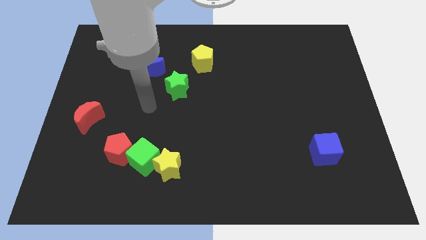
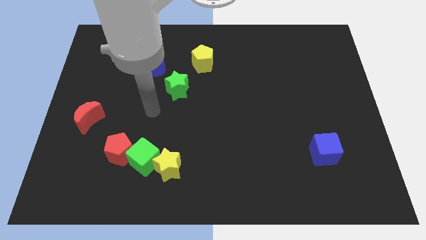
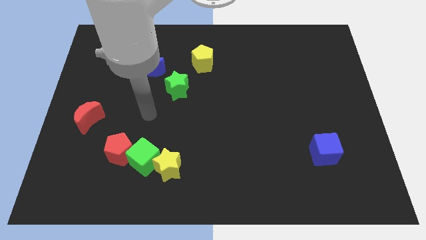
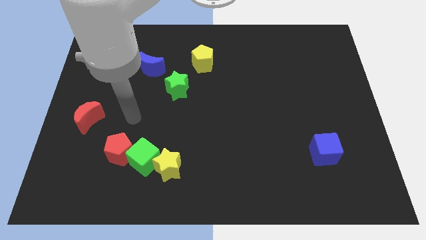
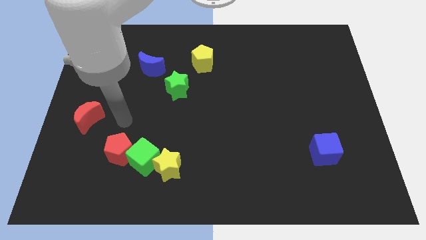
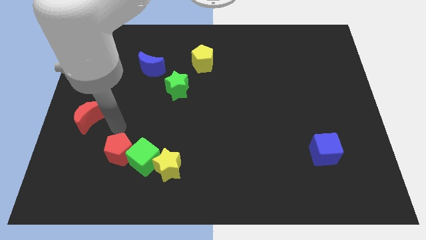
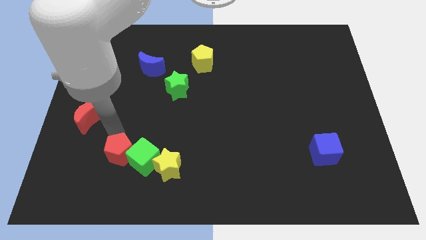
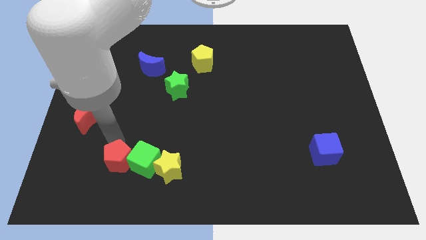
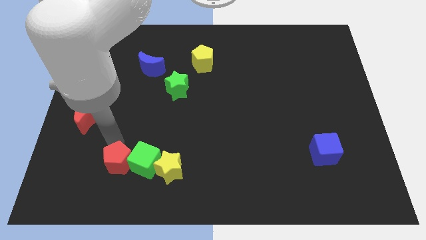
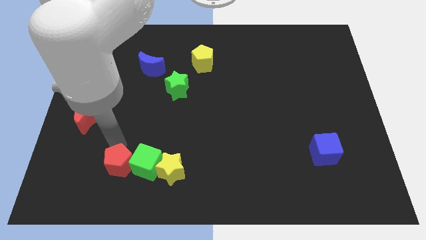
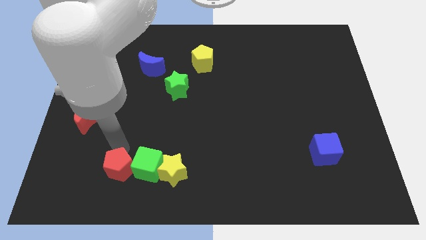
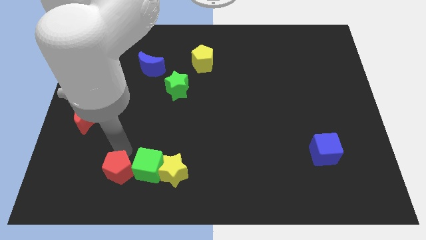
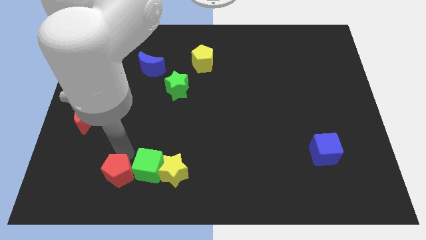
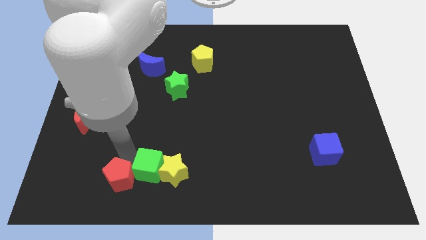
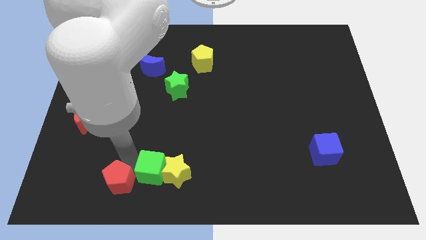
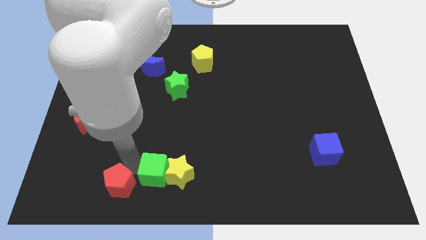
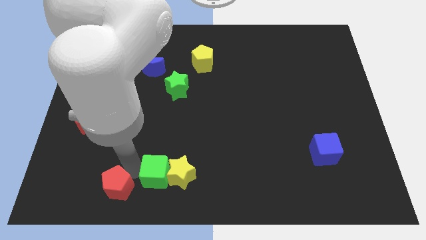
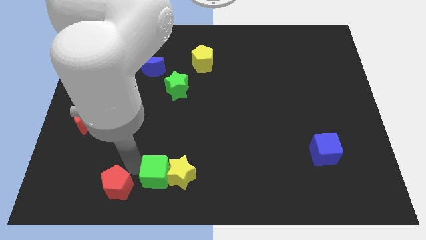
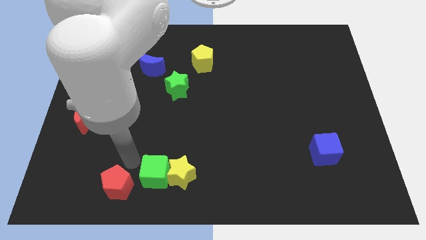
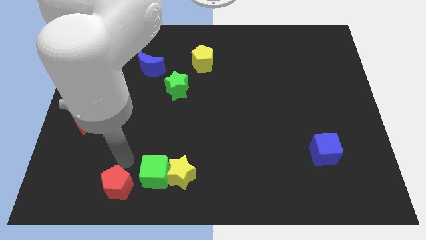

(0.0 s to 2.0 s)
separate the red pentagon from green cube

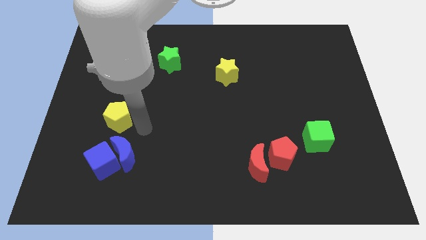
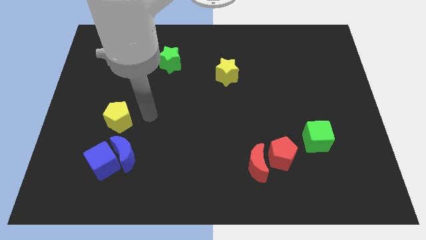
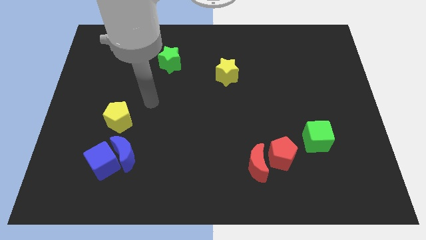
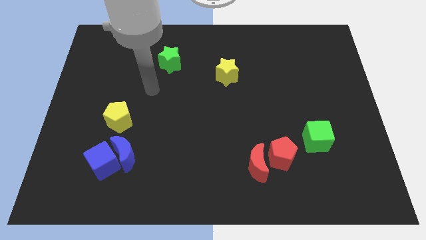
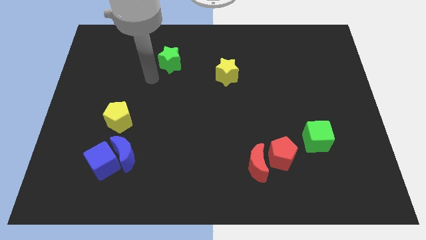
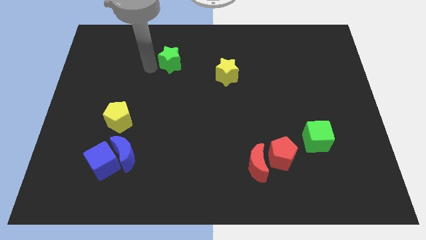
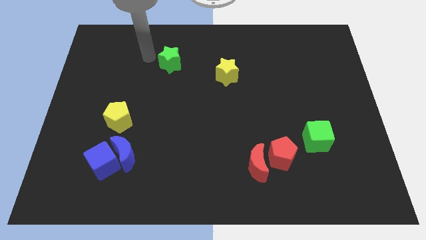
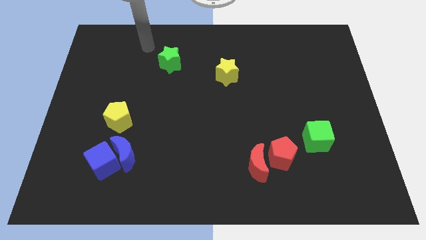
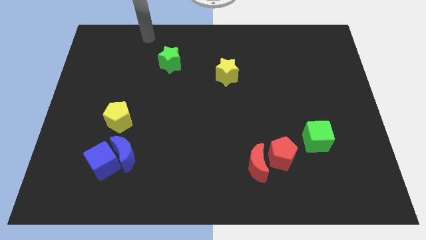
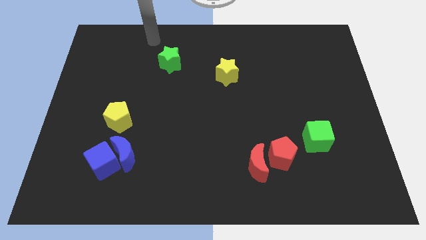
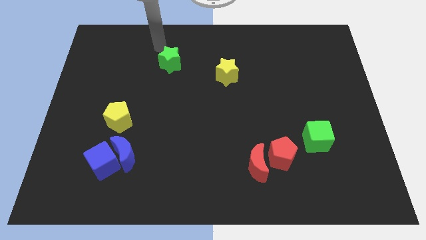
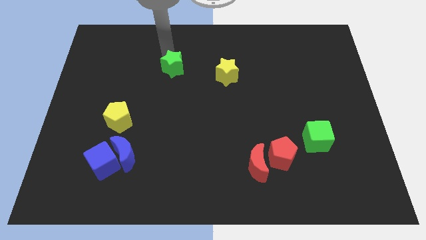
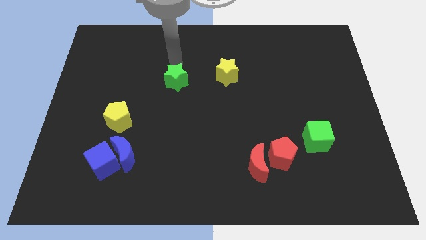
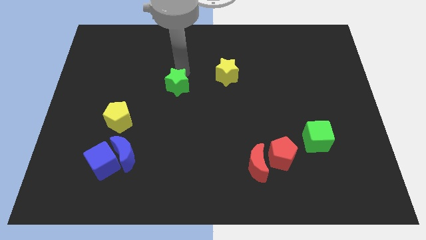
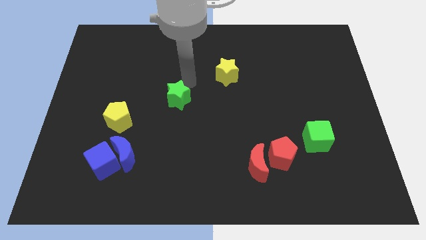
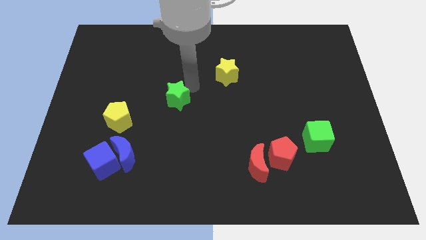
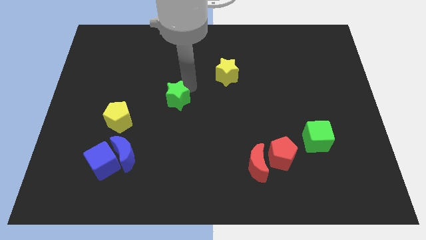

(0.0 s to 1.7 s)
move the green star diagonally in between yellow blocks

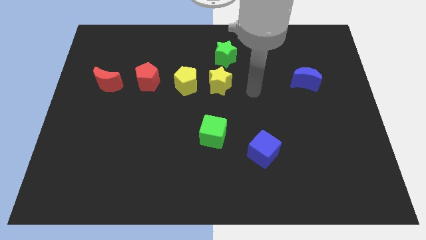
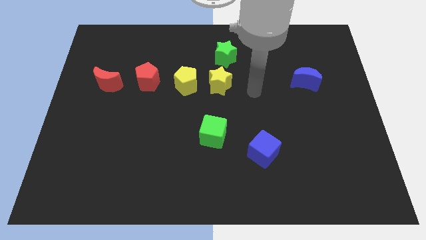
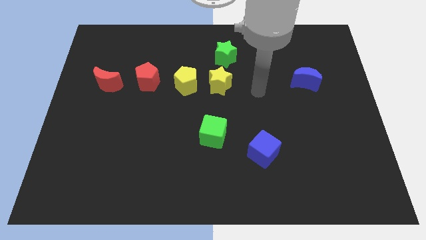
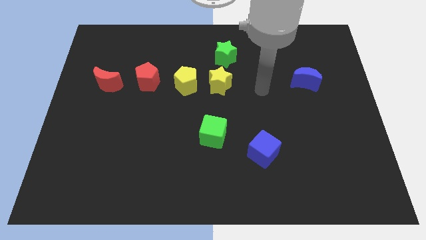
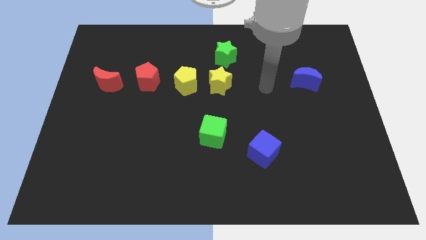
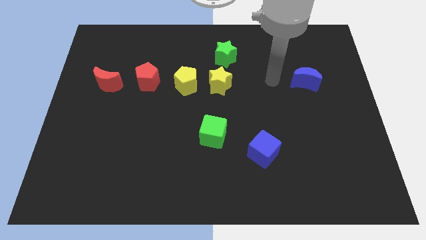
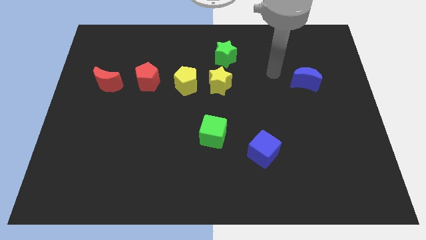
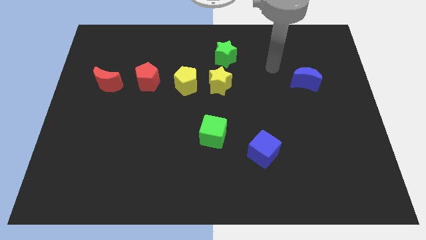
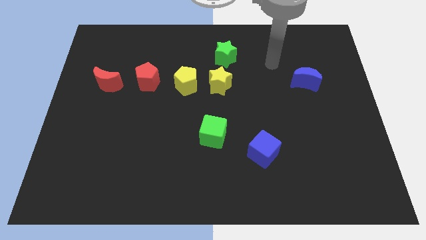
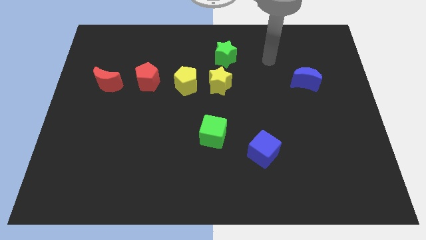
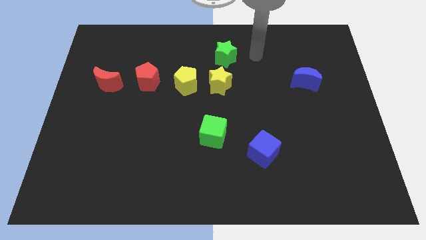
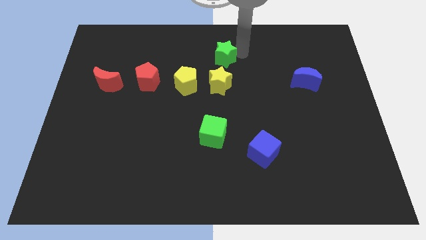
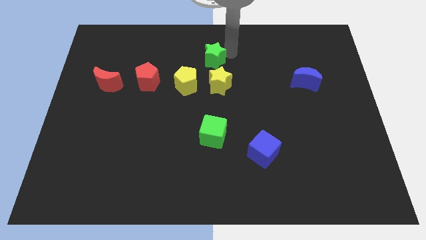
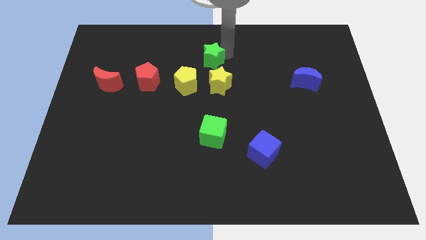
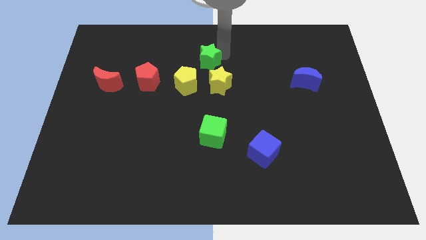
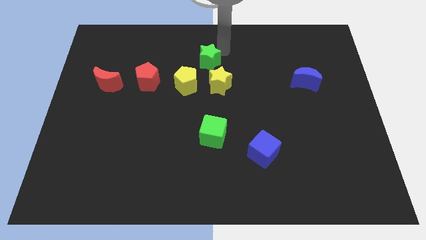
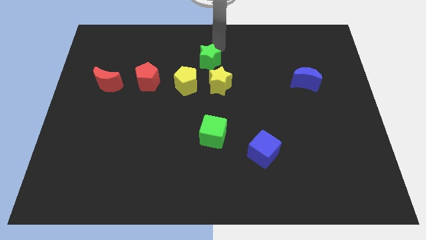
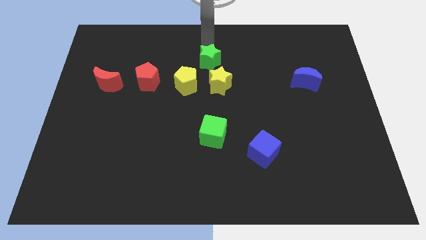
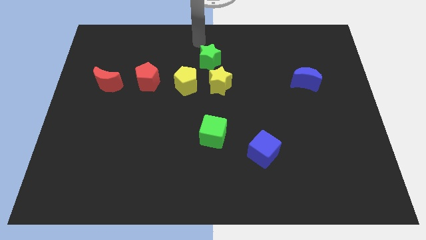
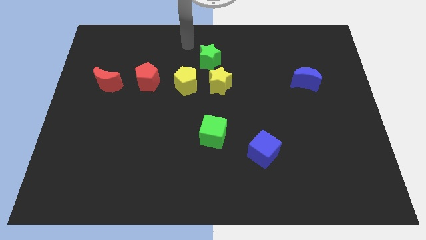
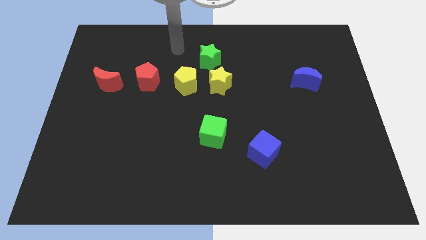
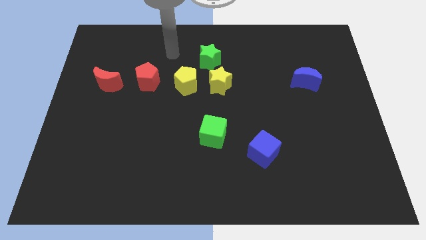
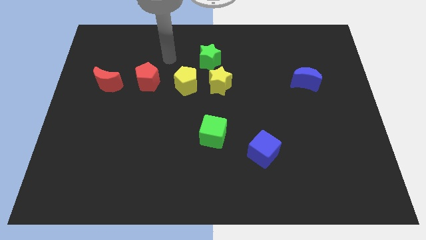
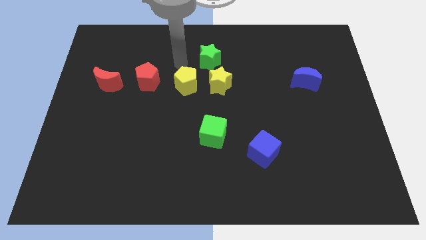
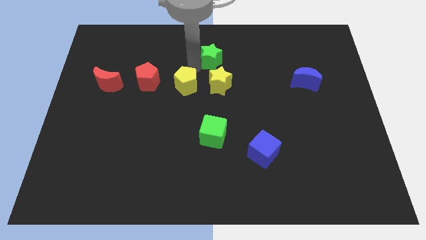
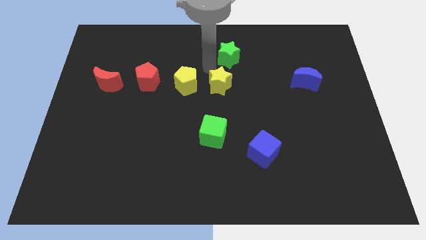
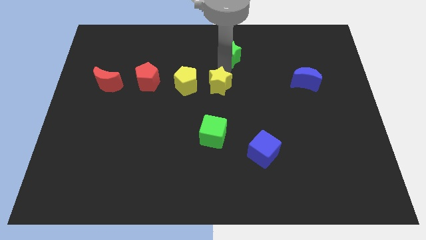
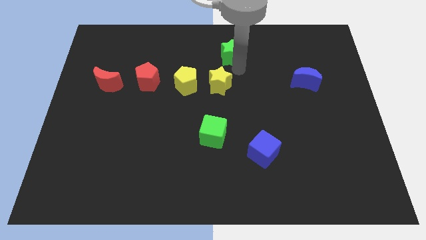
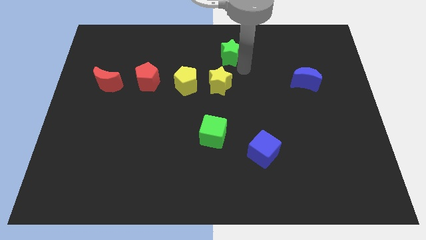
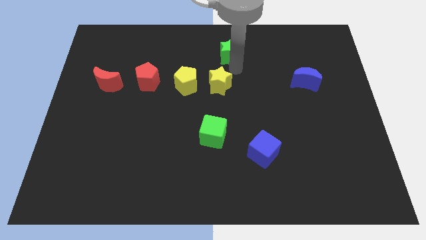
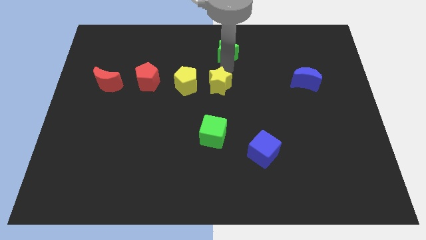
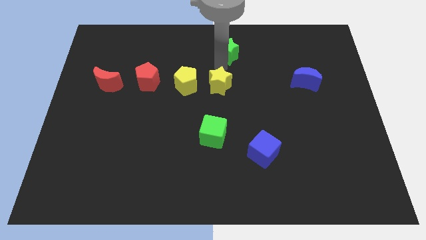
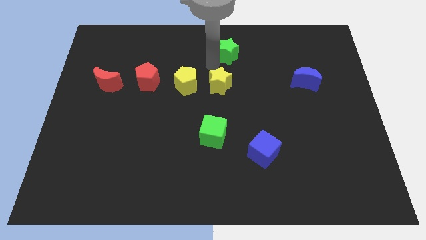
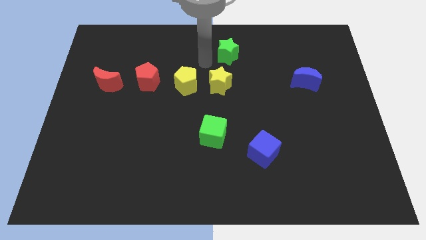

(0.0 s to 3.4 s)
slightly push the green star towards the top right of the corner

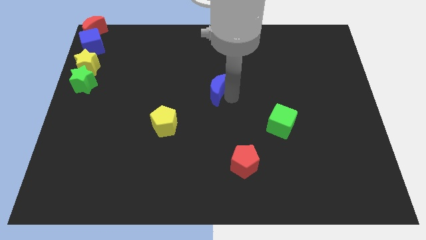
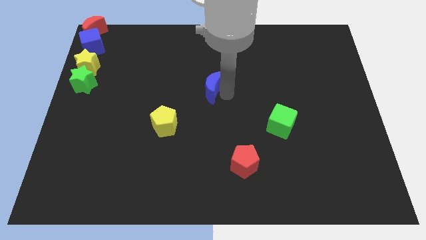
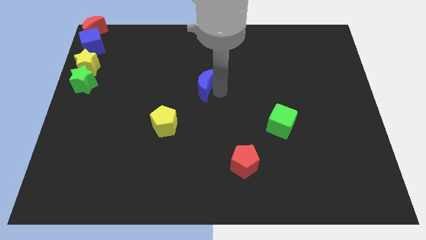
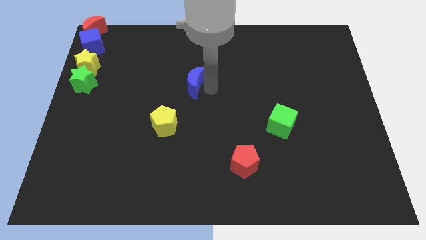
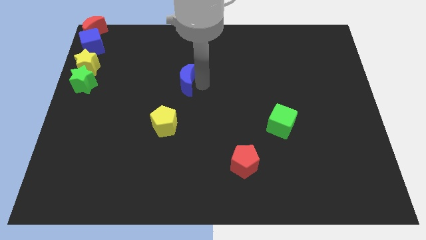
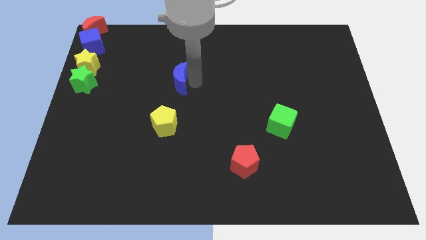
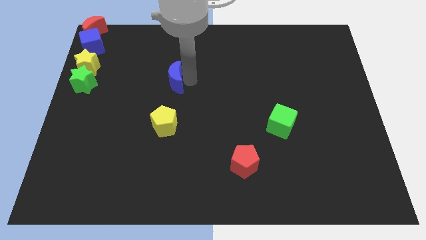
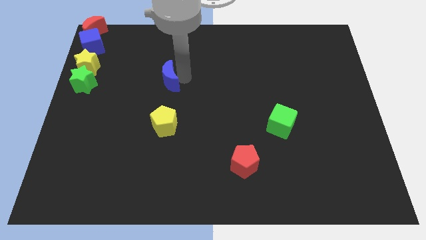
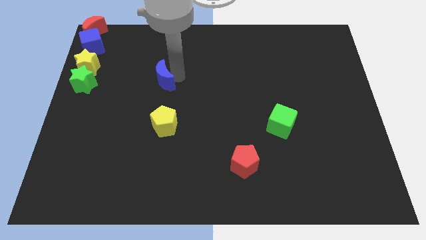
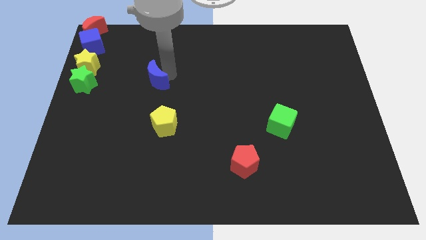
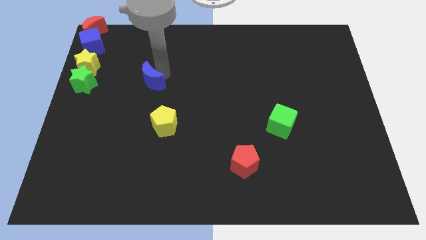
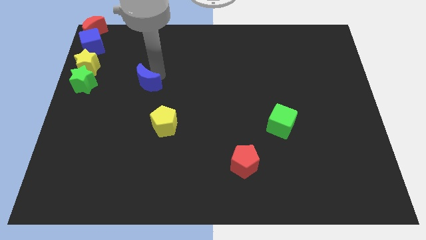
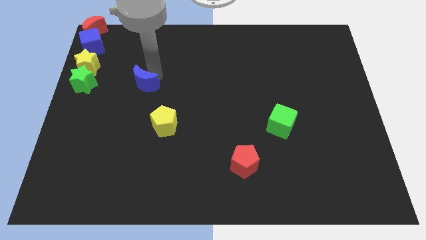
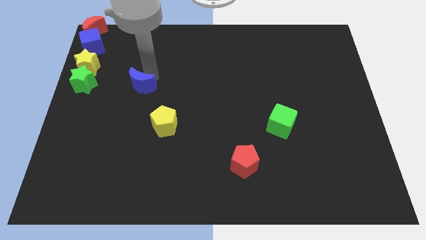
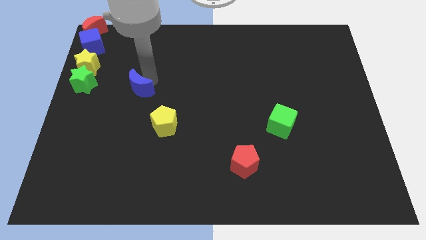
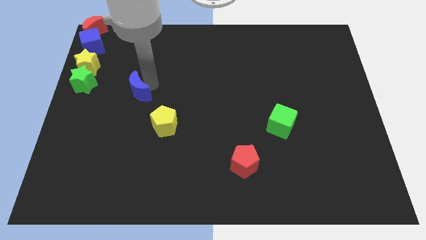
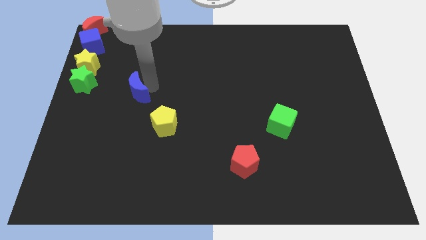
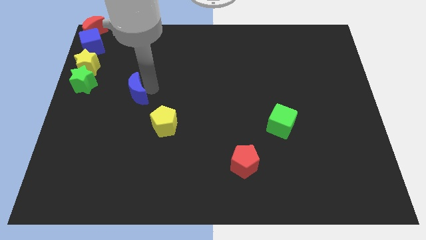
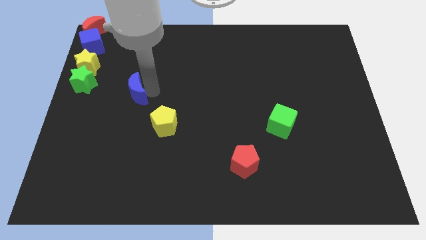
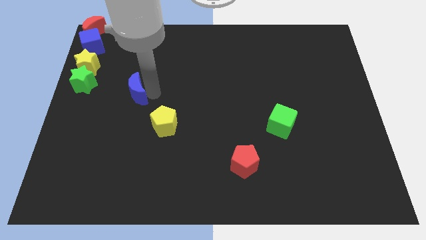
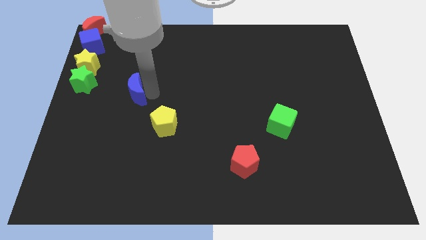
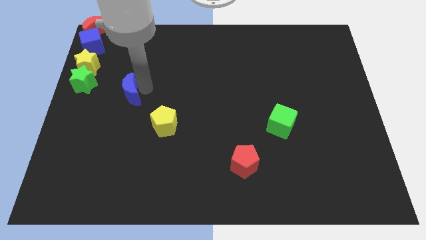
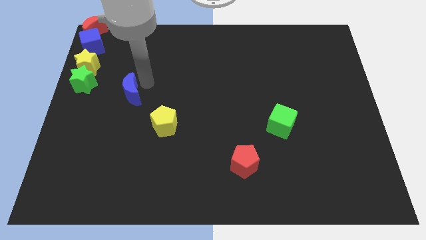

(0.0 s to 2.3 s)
push the blue crescent to the top left of the yellow pentagon
